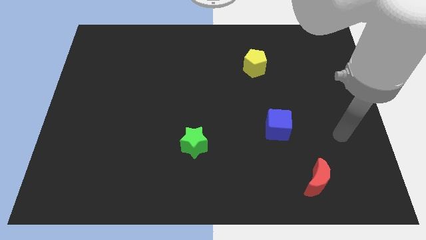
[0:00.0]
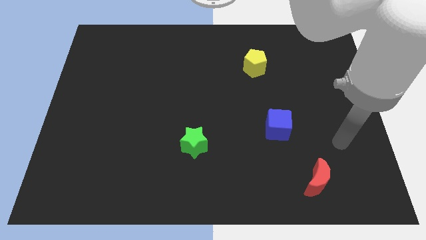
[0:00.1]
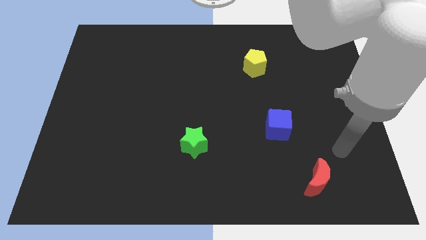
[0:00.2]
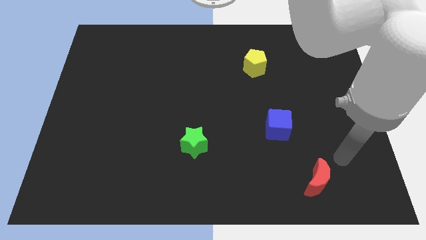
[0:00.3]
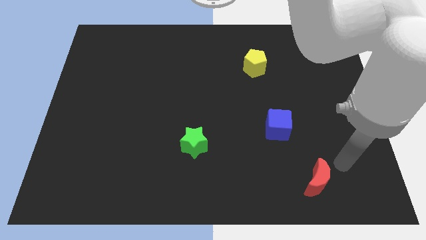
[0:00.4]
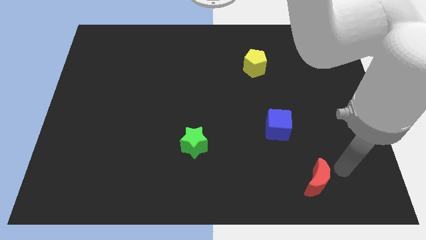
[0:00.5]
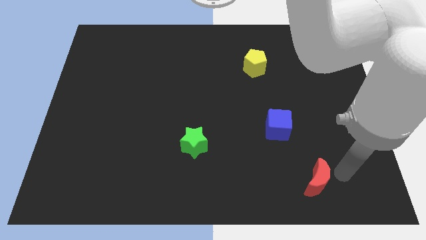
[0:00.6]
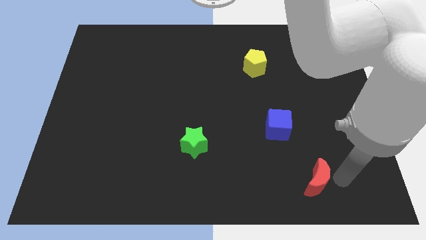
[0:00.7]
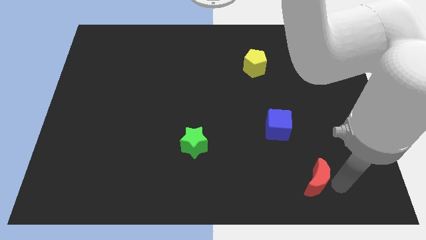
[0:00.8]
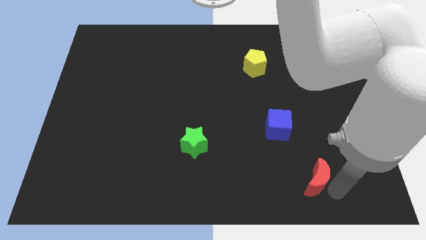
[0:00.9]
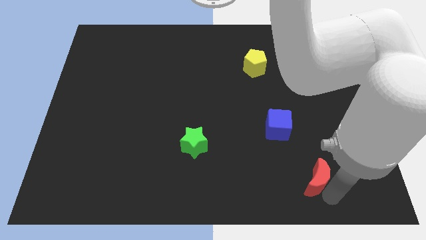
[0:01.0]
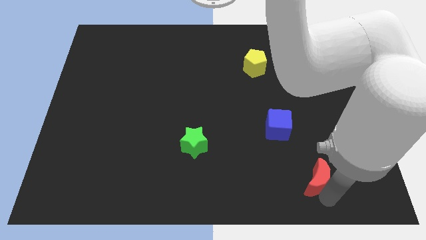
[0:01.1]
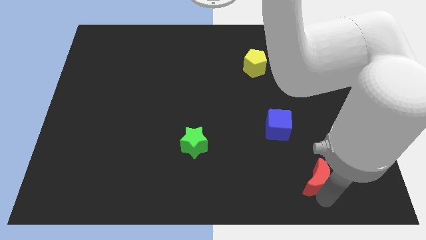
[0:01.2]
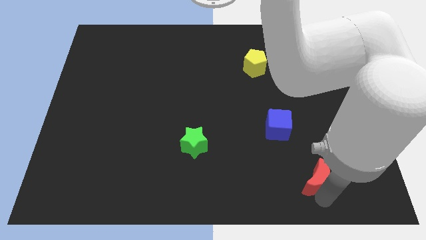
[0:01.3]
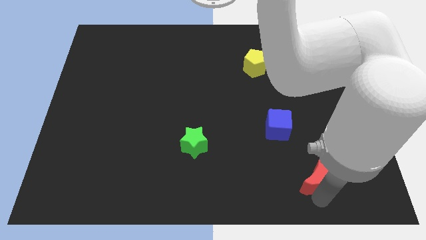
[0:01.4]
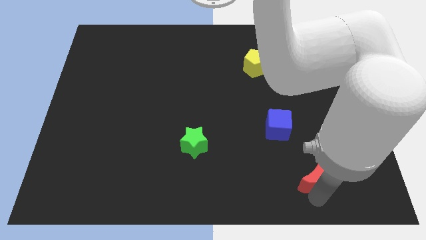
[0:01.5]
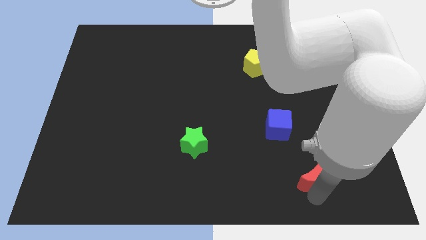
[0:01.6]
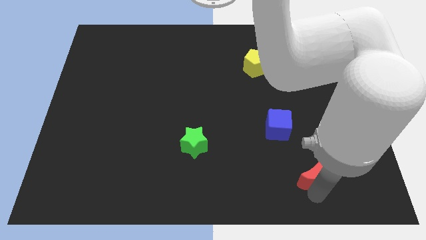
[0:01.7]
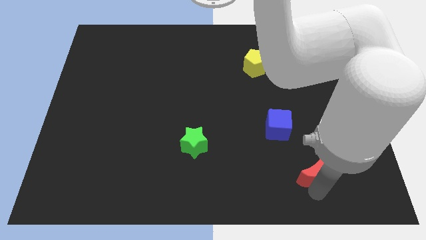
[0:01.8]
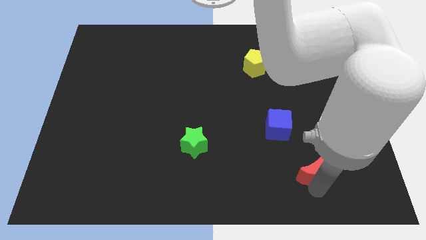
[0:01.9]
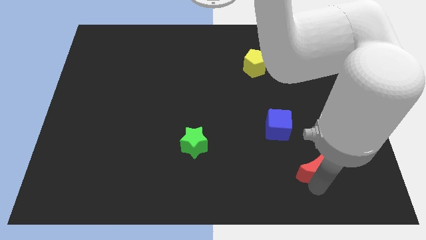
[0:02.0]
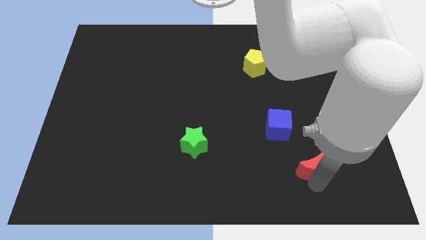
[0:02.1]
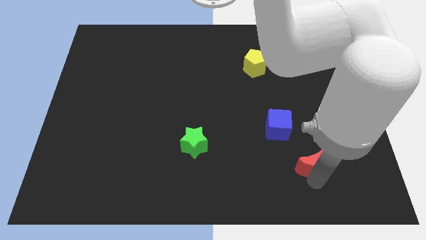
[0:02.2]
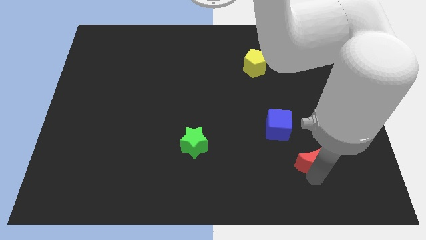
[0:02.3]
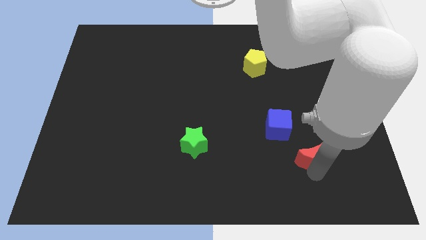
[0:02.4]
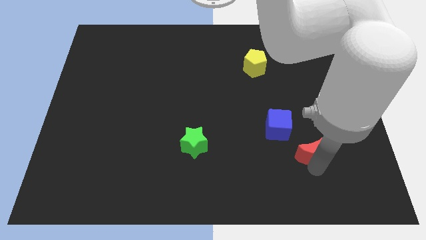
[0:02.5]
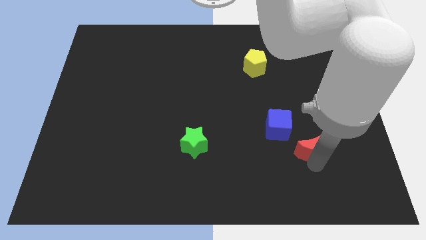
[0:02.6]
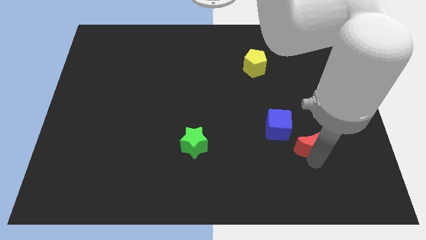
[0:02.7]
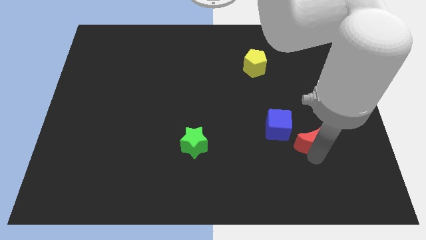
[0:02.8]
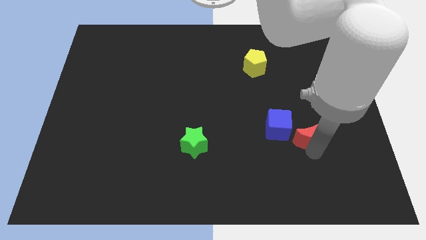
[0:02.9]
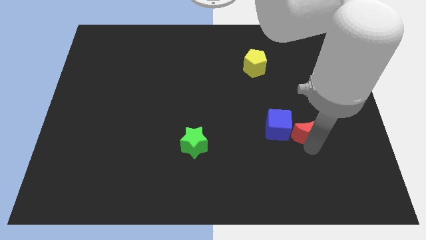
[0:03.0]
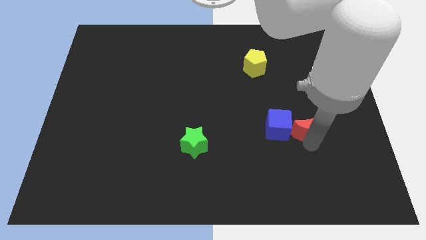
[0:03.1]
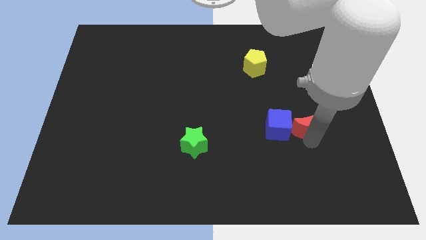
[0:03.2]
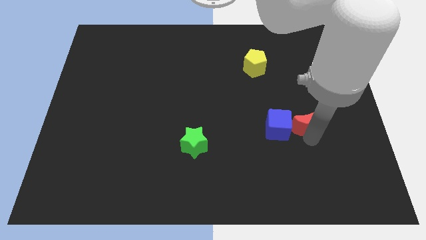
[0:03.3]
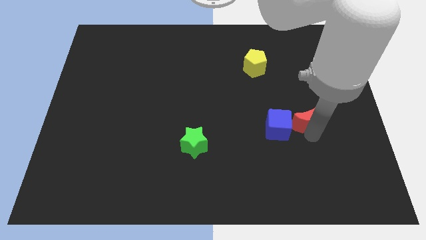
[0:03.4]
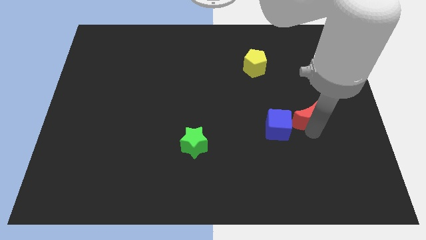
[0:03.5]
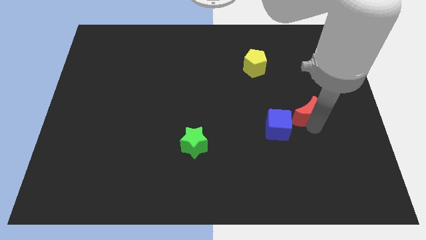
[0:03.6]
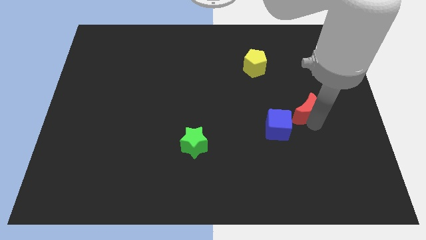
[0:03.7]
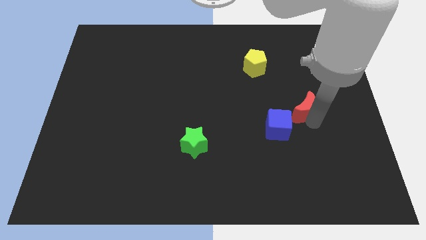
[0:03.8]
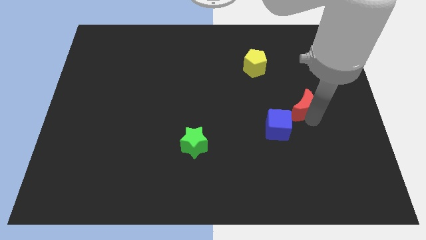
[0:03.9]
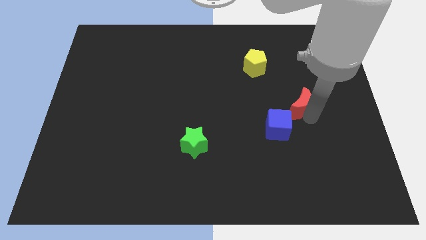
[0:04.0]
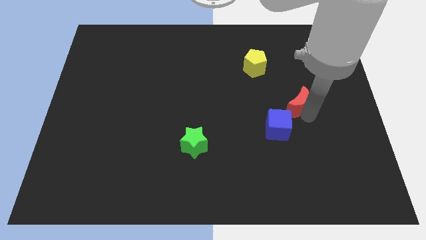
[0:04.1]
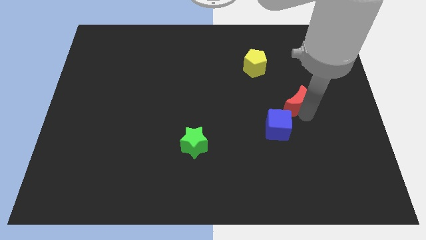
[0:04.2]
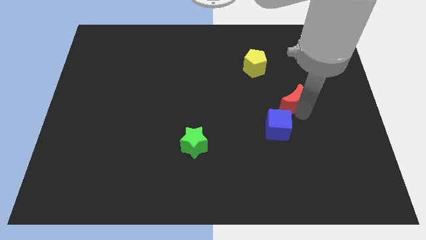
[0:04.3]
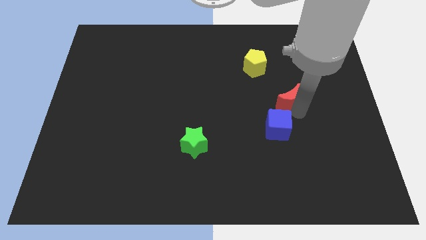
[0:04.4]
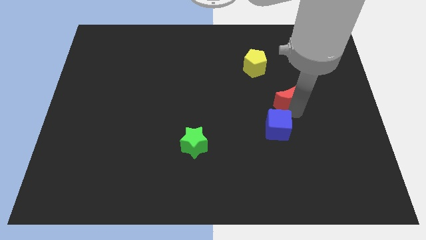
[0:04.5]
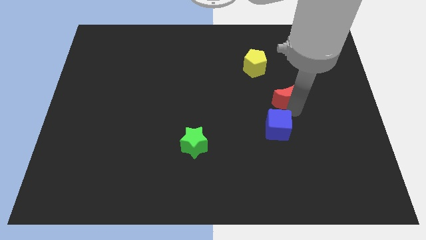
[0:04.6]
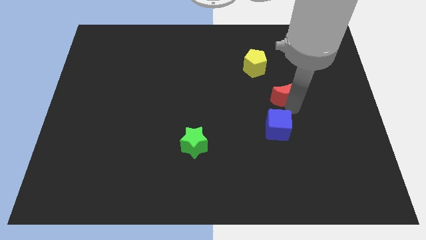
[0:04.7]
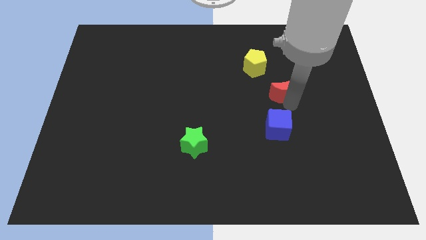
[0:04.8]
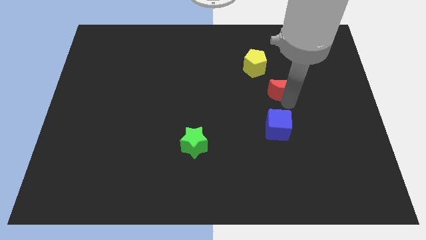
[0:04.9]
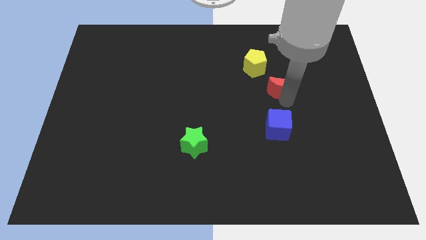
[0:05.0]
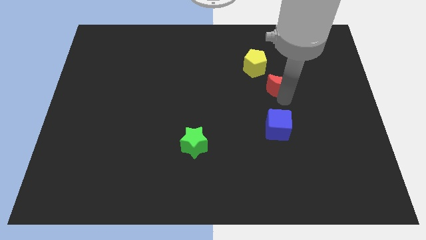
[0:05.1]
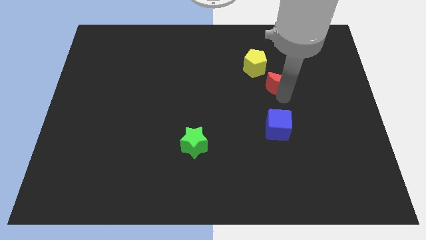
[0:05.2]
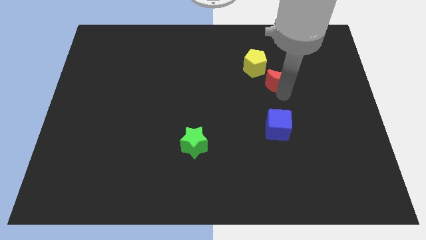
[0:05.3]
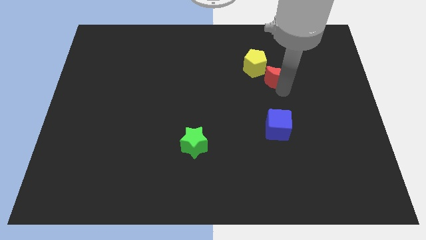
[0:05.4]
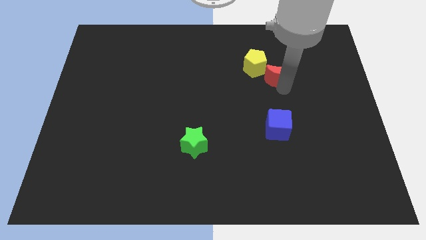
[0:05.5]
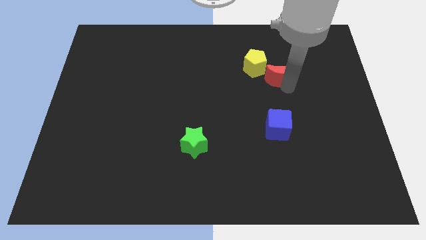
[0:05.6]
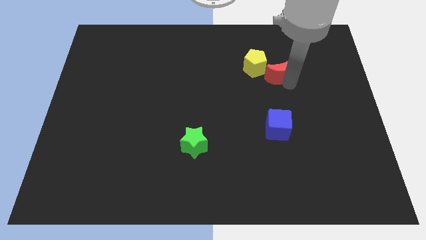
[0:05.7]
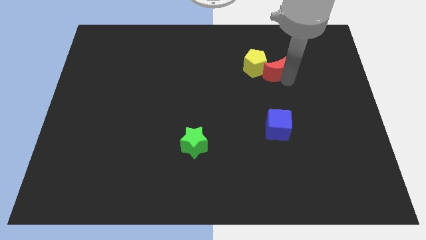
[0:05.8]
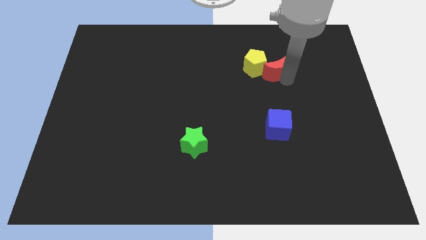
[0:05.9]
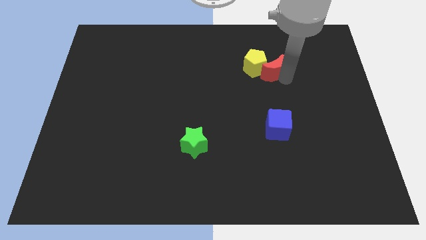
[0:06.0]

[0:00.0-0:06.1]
push the moon to the pentagon

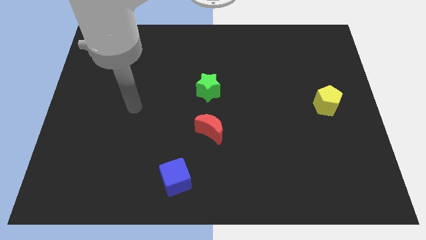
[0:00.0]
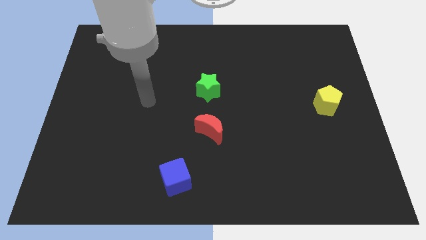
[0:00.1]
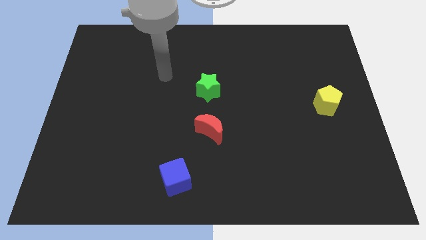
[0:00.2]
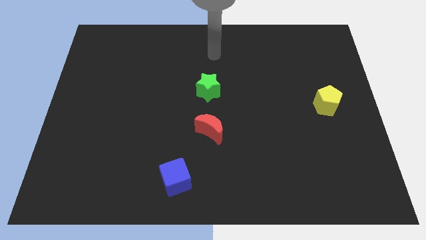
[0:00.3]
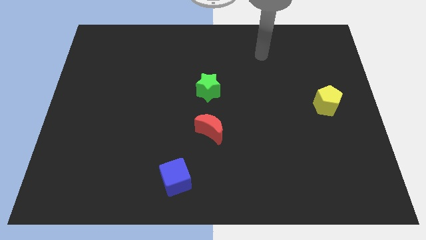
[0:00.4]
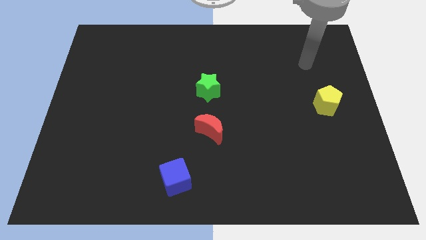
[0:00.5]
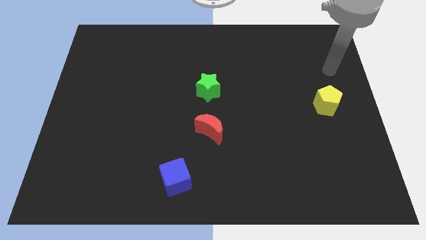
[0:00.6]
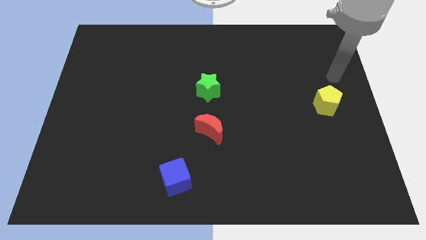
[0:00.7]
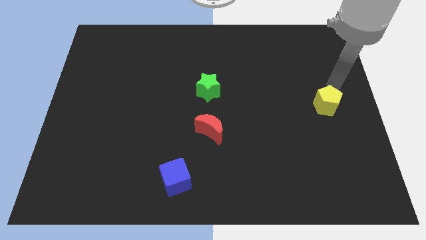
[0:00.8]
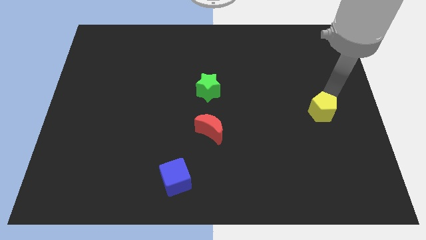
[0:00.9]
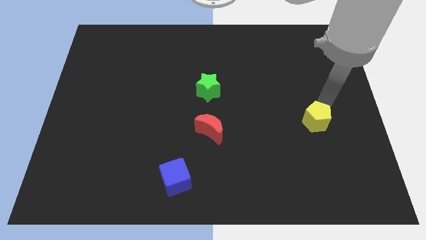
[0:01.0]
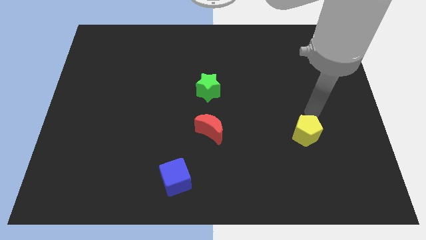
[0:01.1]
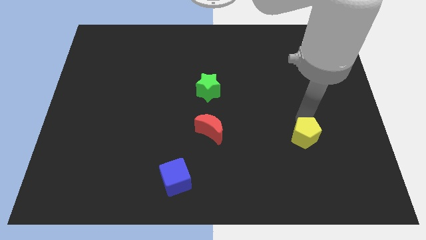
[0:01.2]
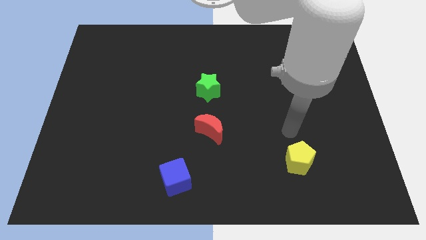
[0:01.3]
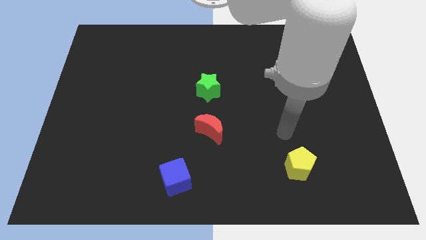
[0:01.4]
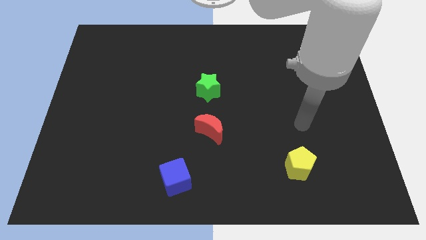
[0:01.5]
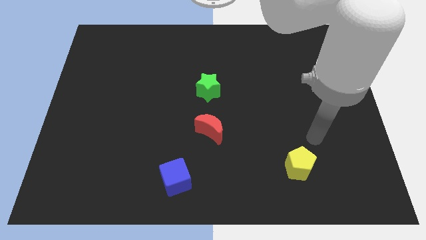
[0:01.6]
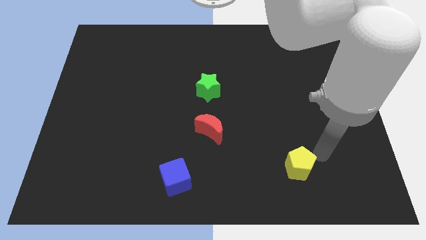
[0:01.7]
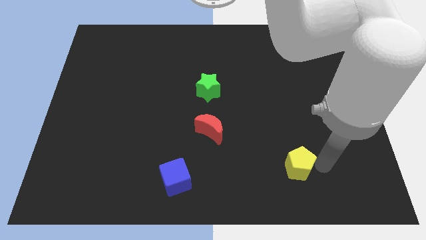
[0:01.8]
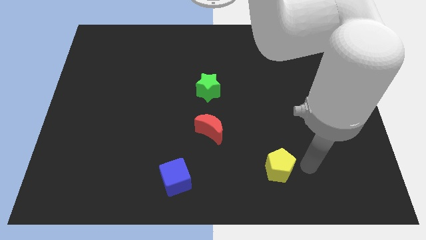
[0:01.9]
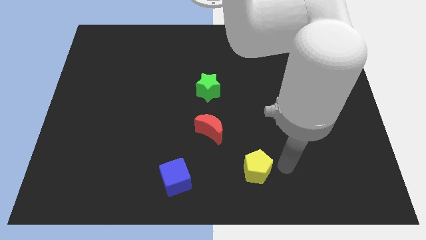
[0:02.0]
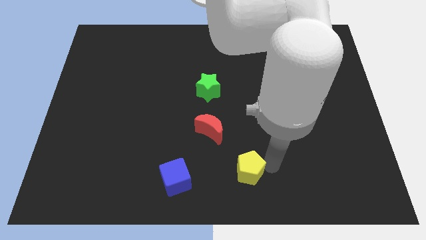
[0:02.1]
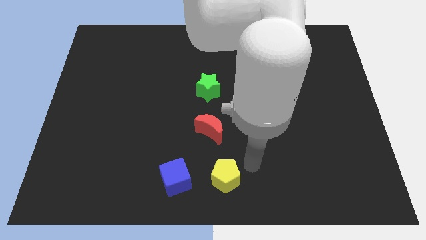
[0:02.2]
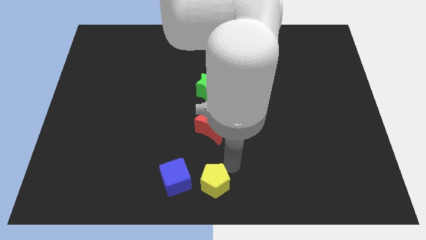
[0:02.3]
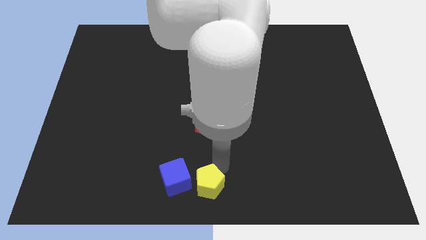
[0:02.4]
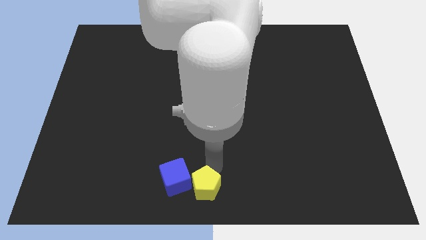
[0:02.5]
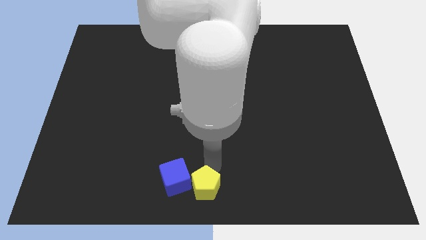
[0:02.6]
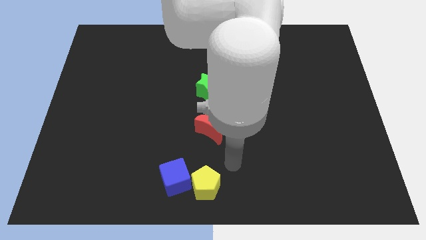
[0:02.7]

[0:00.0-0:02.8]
put the yellow block to the blue block
